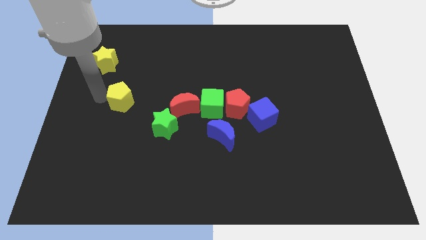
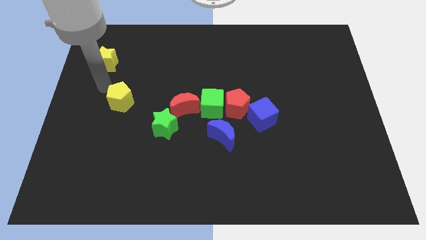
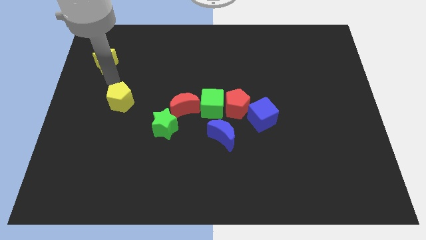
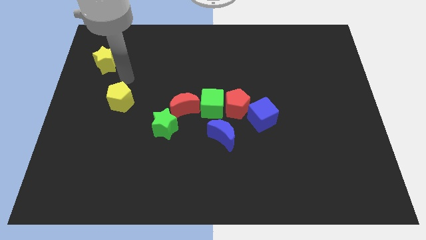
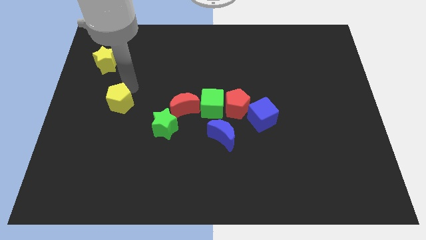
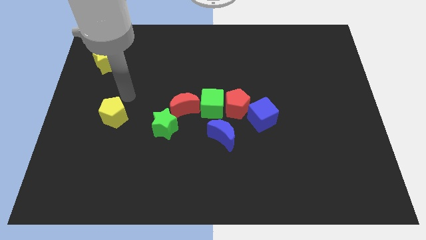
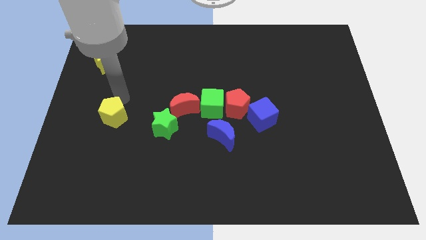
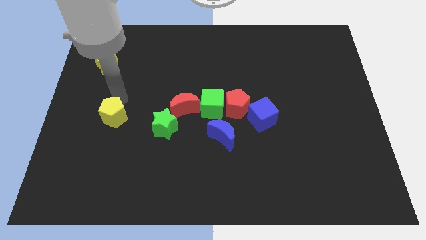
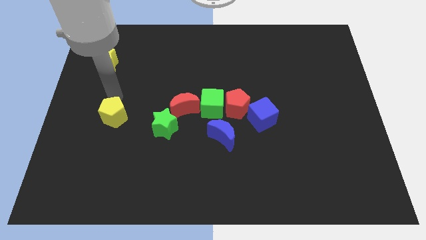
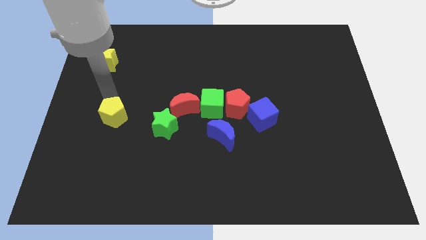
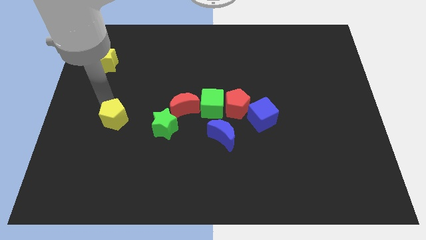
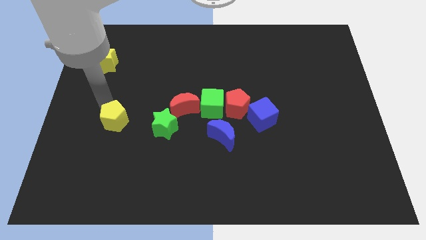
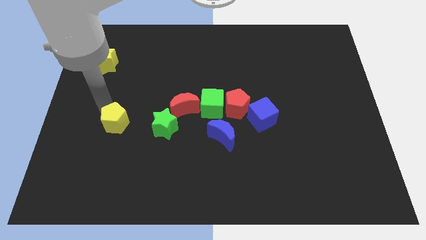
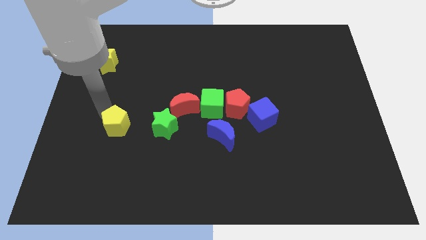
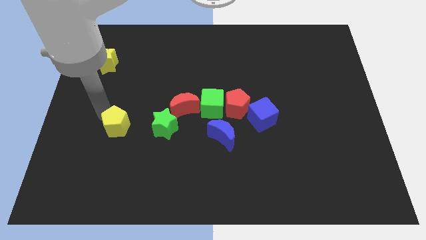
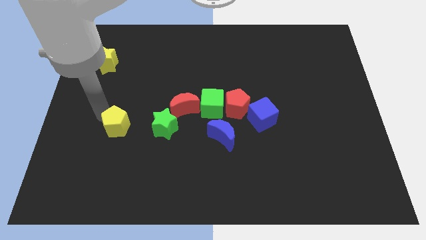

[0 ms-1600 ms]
place the yellow pentagon parallel to the green star

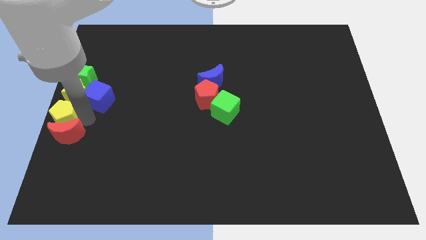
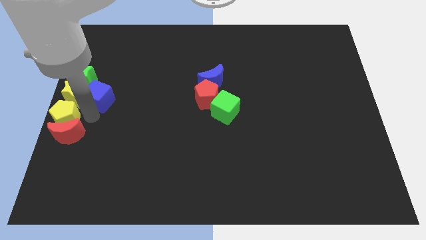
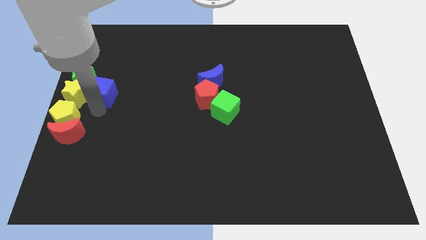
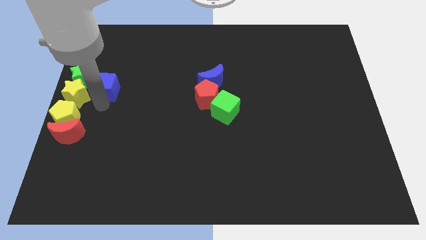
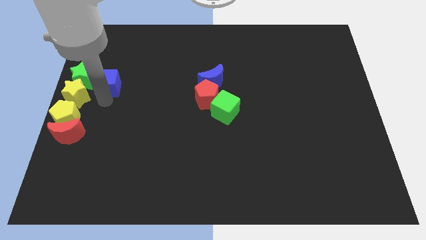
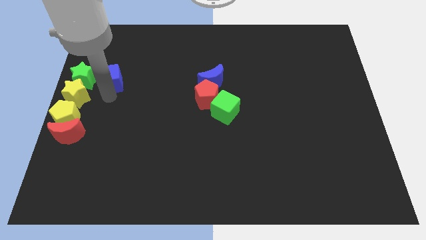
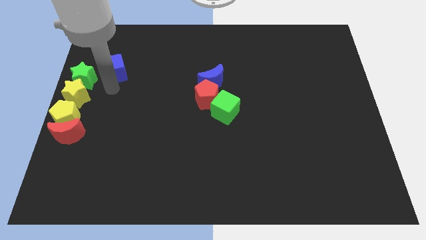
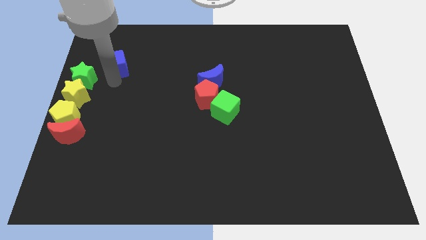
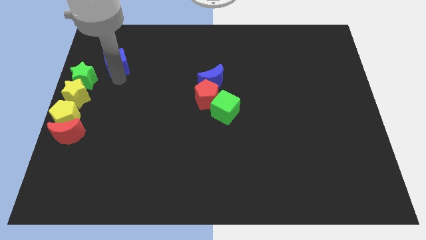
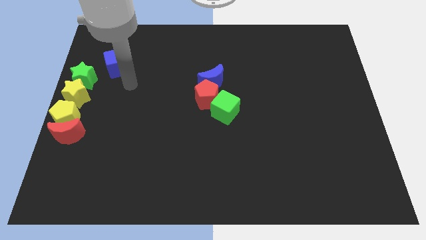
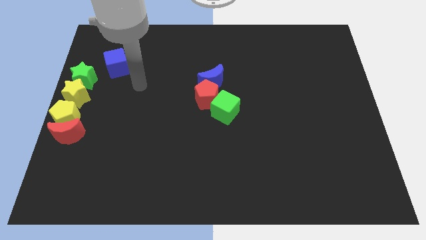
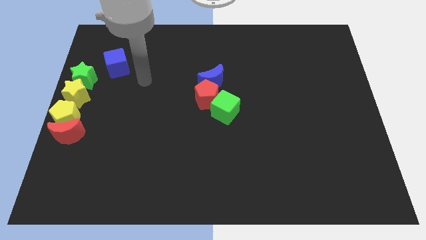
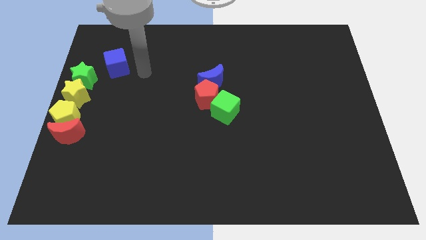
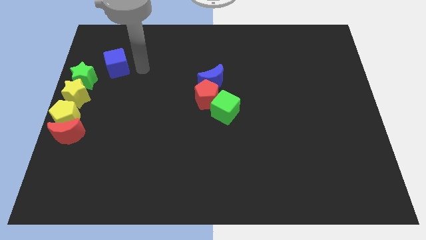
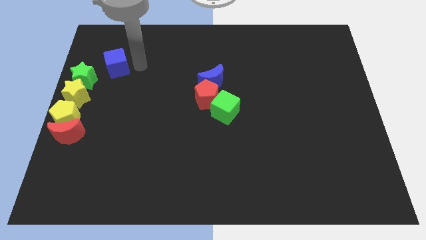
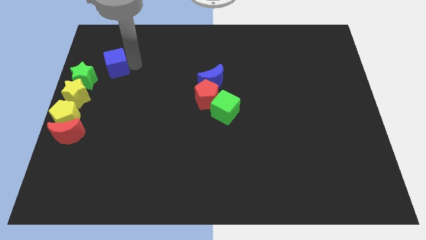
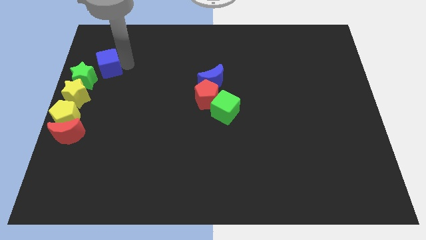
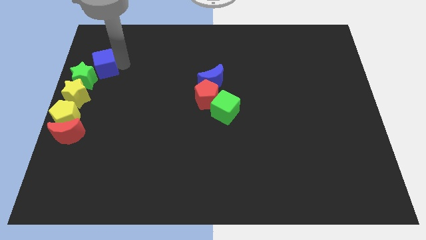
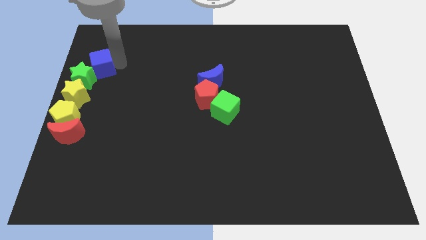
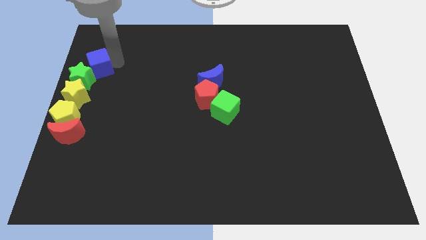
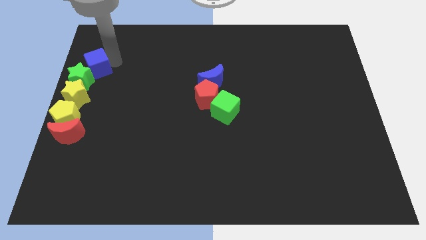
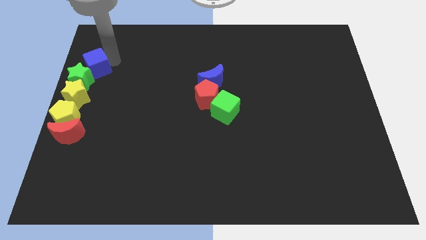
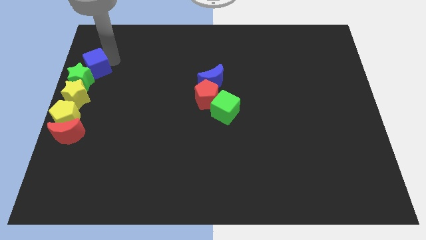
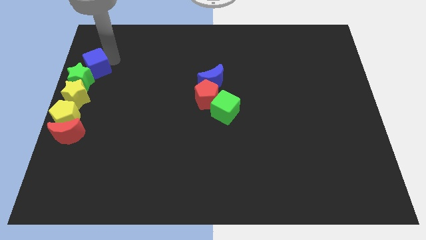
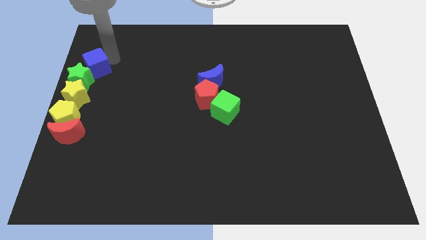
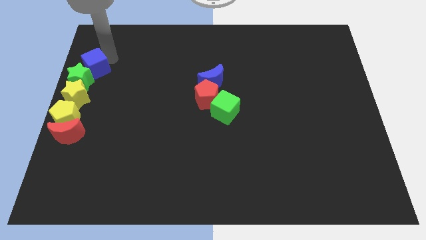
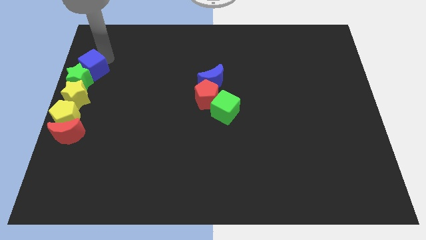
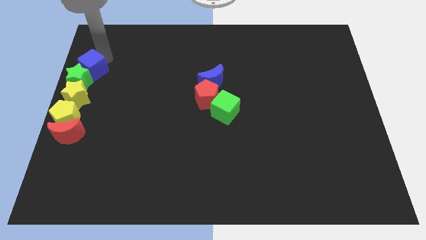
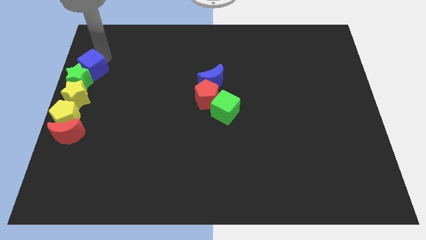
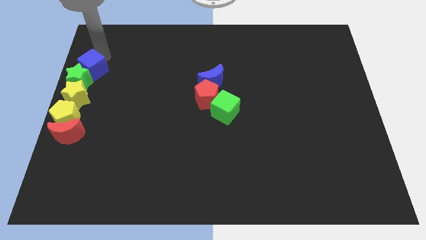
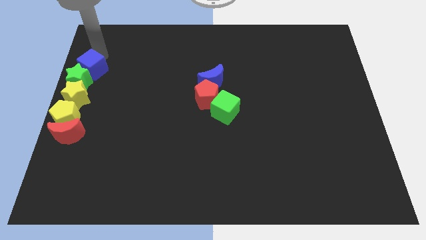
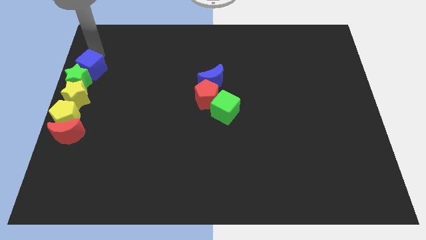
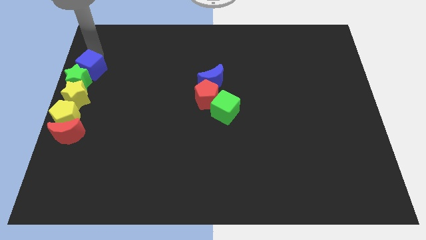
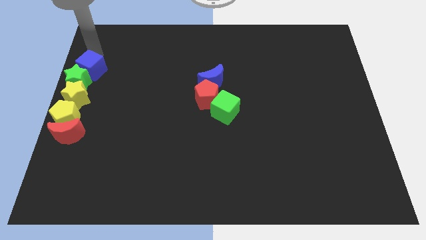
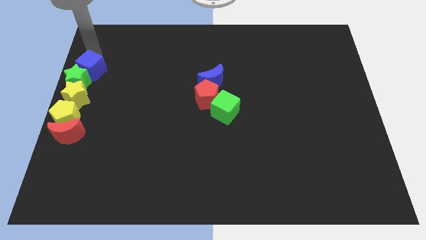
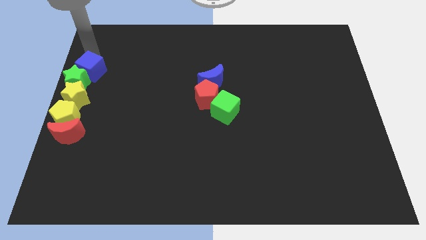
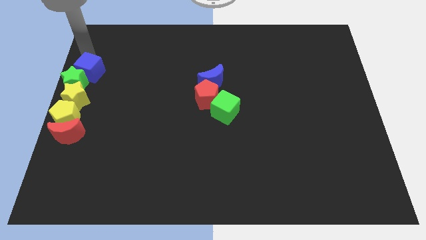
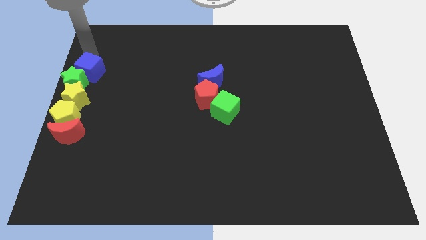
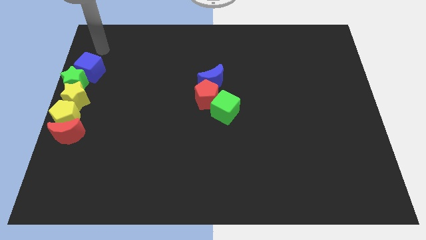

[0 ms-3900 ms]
place the blue cube above the green star

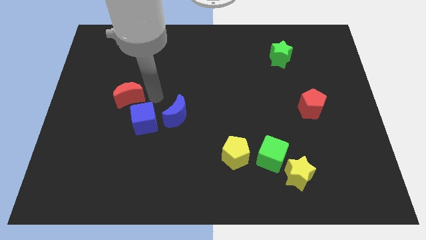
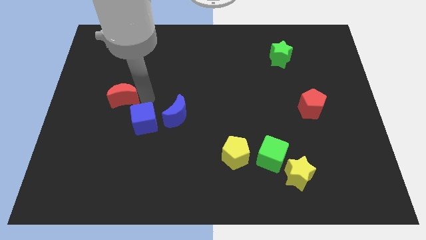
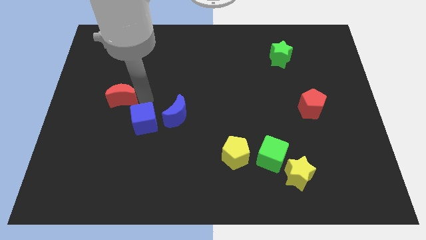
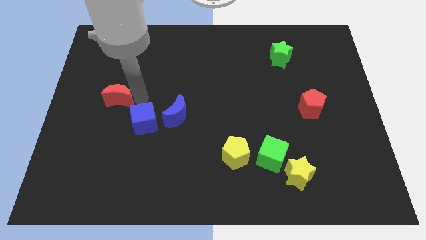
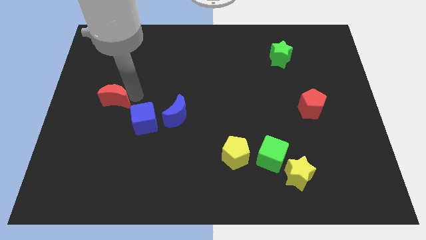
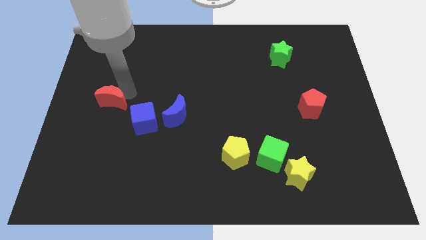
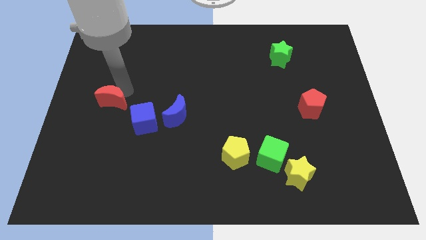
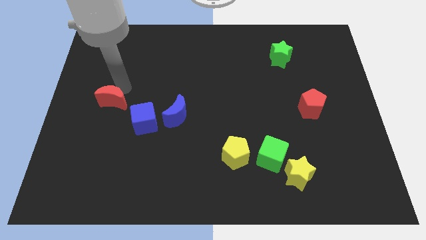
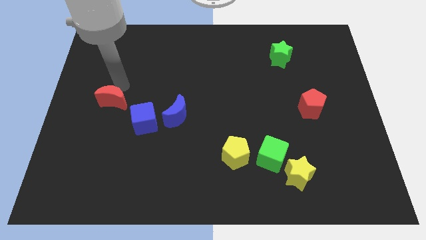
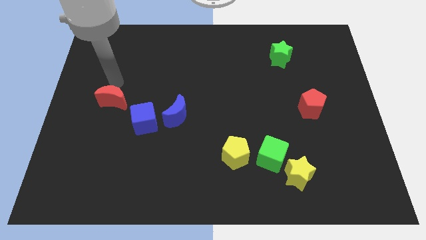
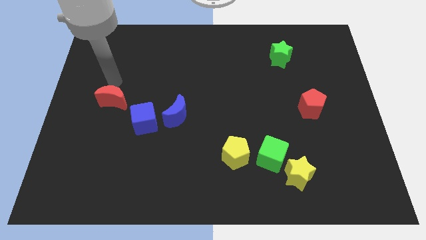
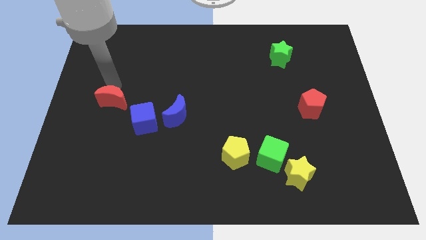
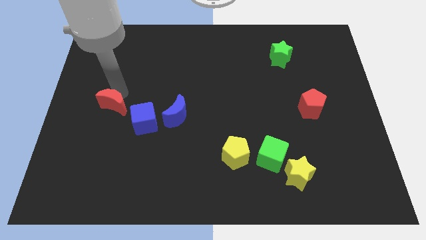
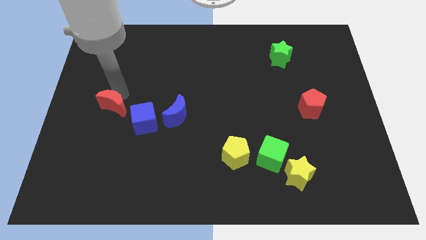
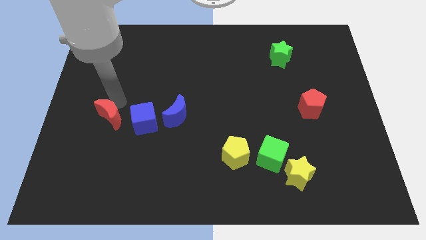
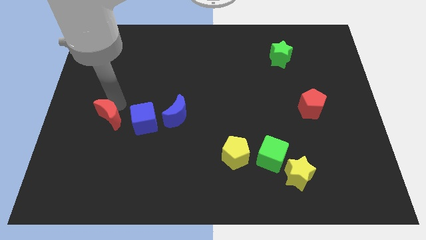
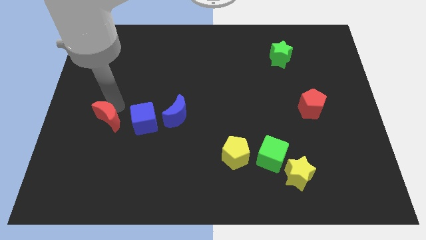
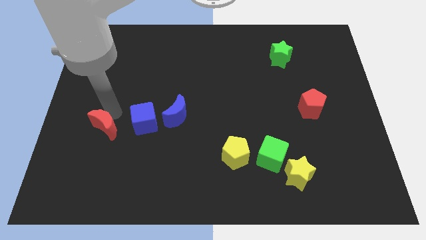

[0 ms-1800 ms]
place the red moon at the left side of the blue cube

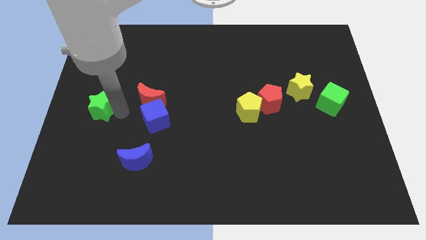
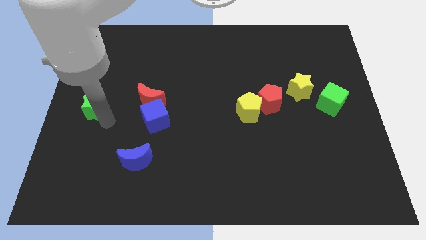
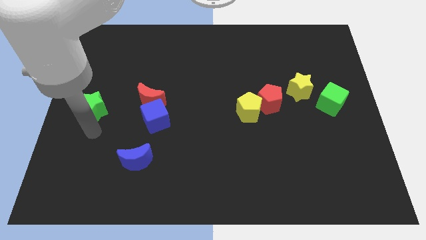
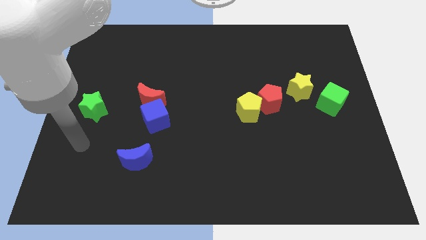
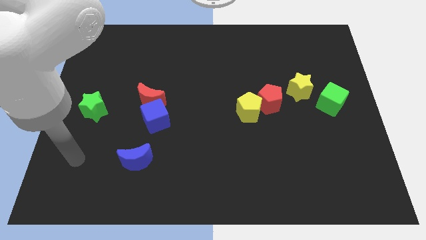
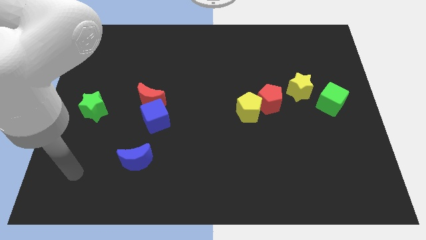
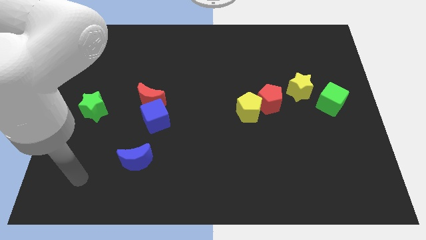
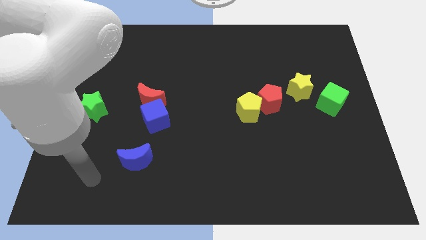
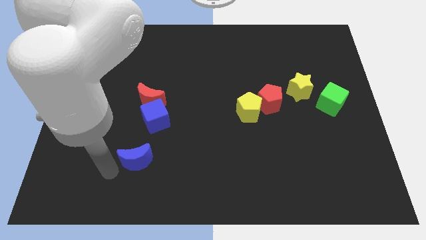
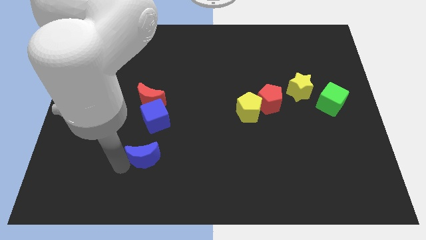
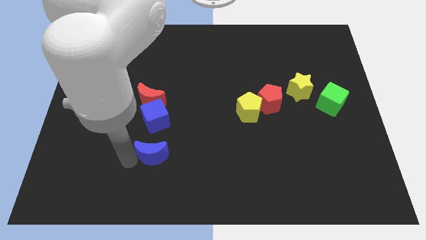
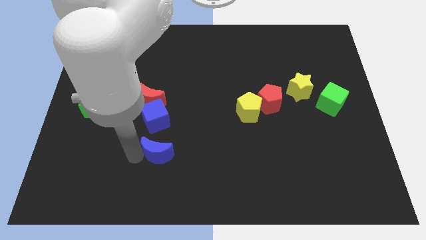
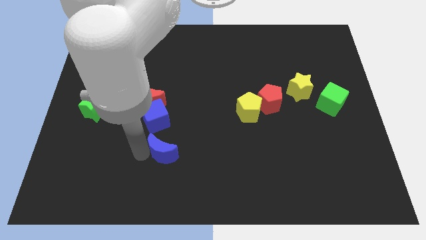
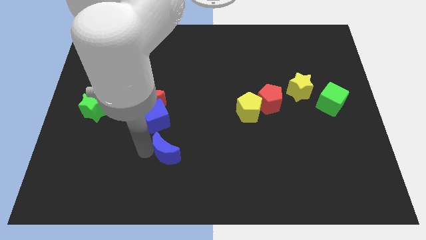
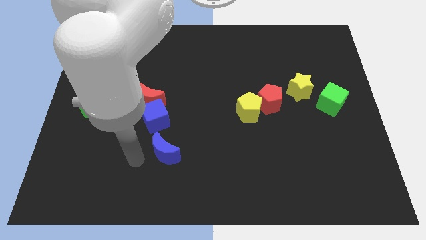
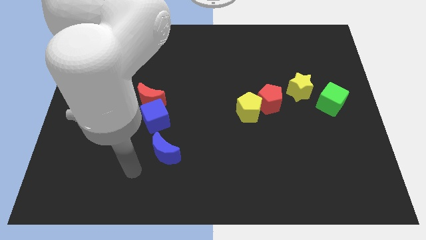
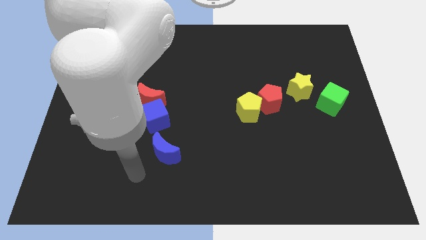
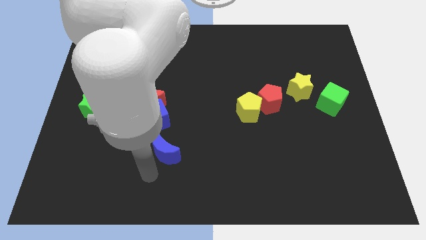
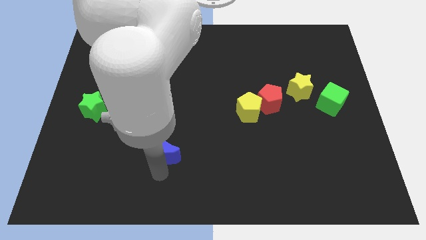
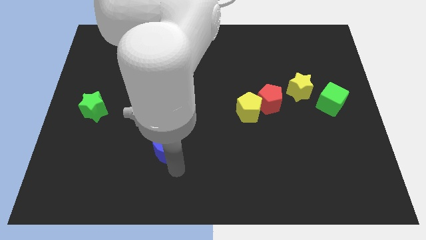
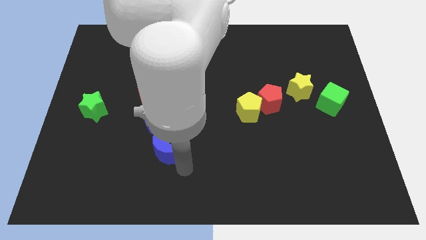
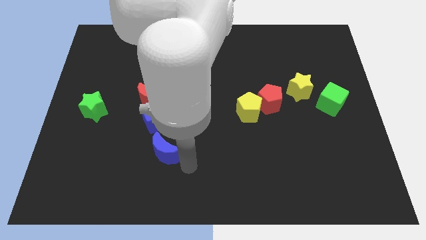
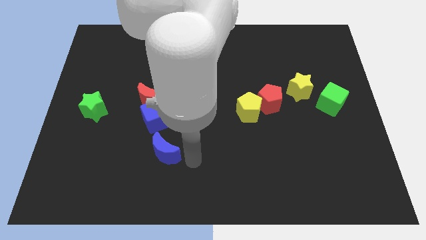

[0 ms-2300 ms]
move the blue crescent right to the bottom of the blue cube
